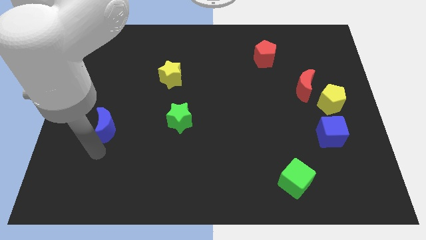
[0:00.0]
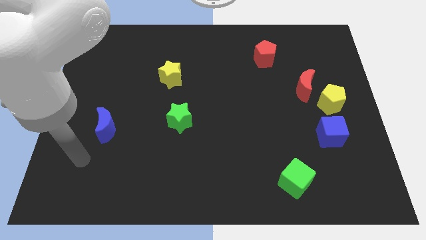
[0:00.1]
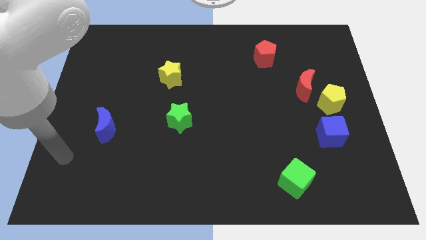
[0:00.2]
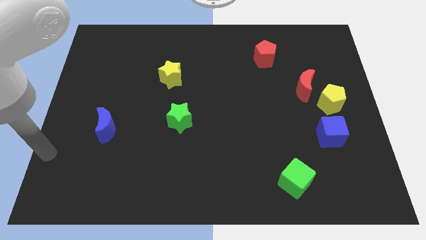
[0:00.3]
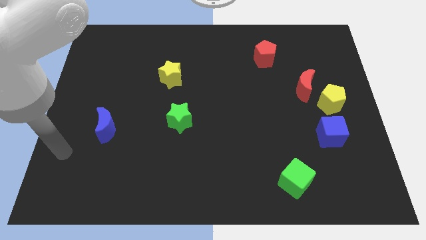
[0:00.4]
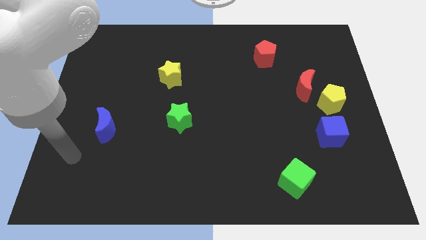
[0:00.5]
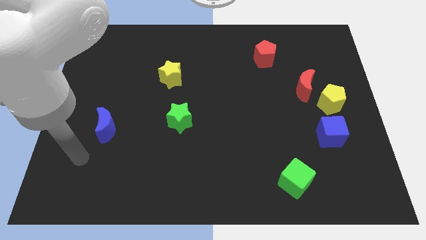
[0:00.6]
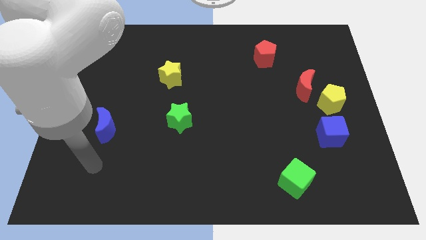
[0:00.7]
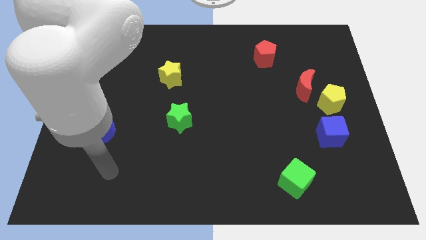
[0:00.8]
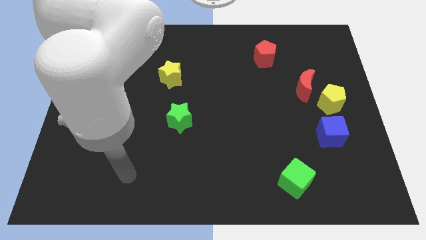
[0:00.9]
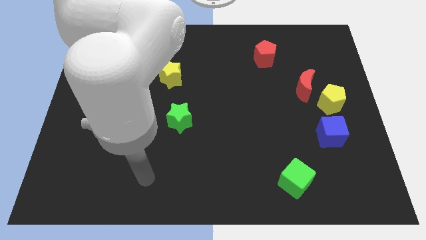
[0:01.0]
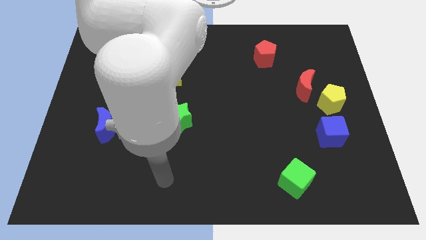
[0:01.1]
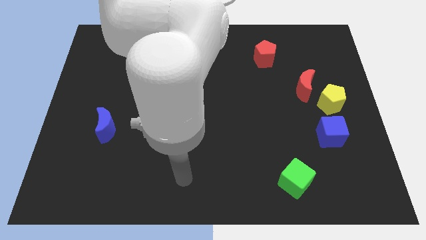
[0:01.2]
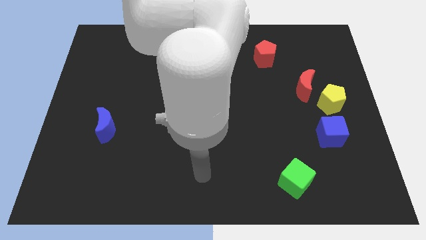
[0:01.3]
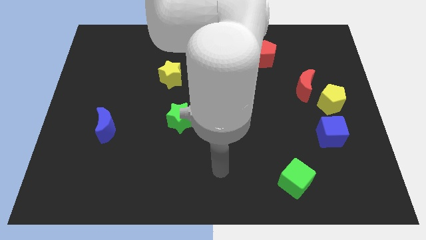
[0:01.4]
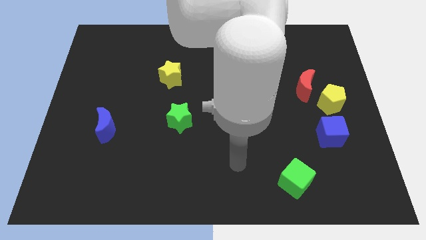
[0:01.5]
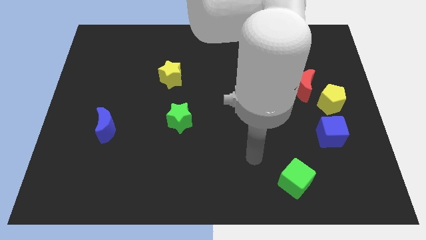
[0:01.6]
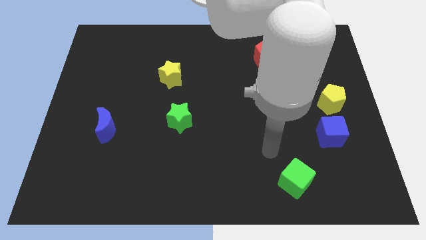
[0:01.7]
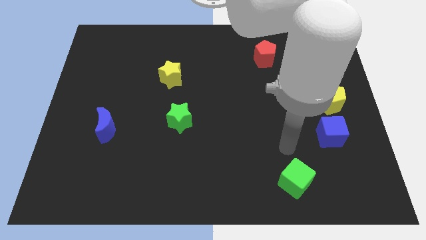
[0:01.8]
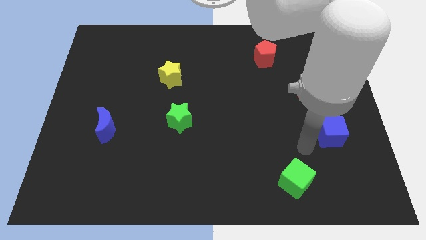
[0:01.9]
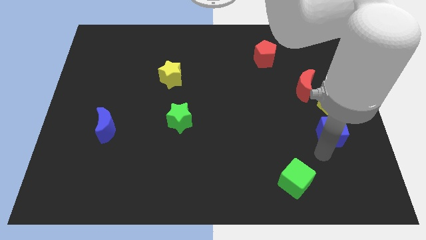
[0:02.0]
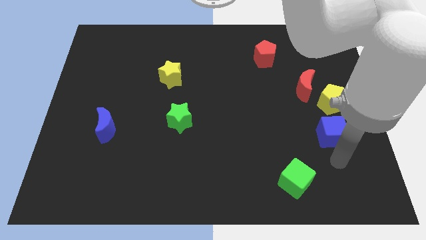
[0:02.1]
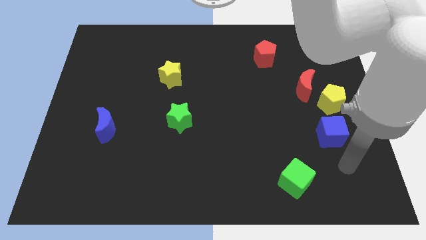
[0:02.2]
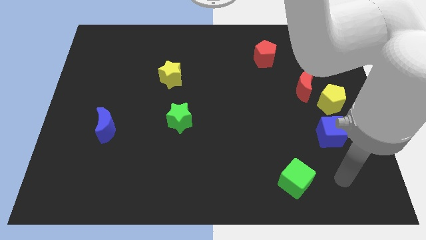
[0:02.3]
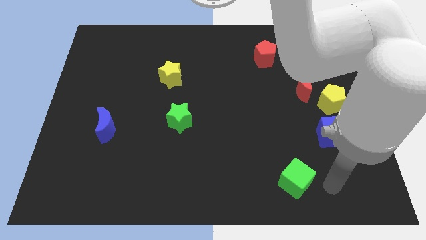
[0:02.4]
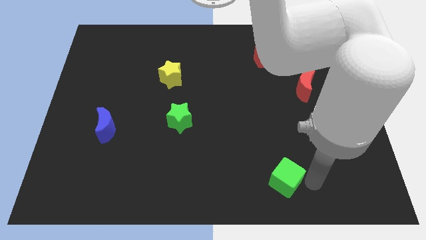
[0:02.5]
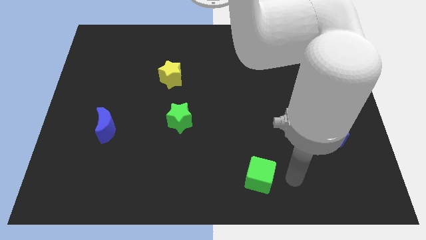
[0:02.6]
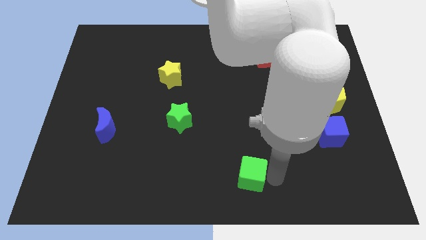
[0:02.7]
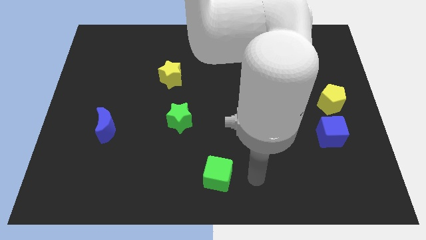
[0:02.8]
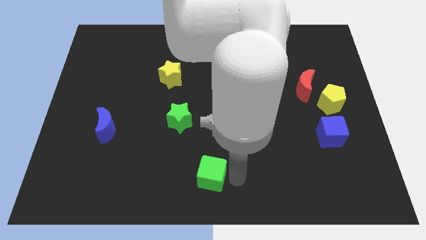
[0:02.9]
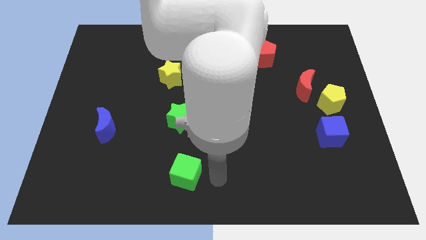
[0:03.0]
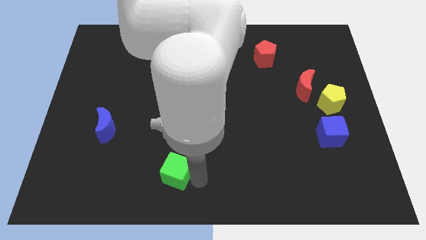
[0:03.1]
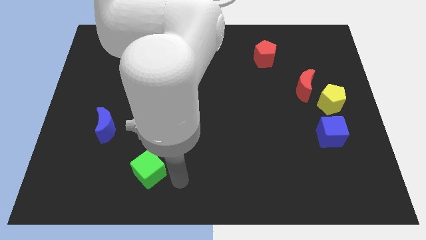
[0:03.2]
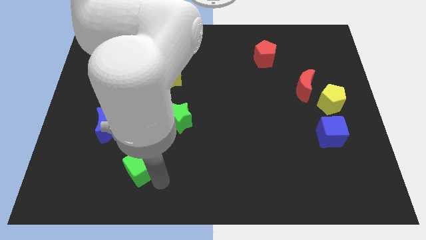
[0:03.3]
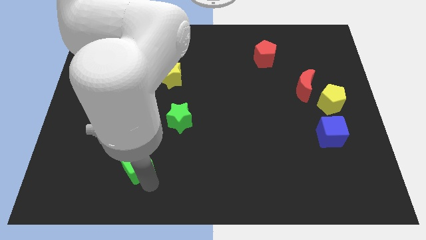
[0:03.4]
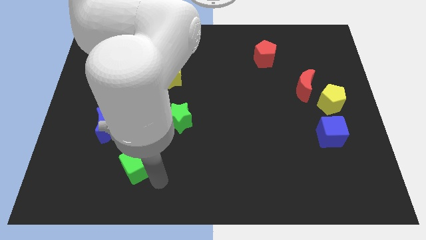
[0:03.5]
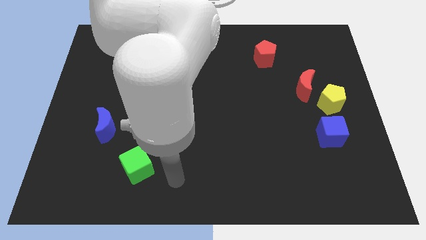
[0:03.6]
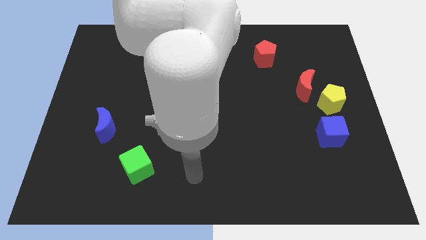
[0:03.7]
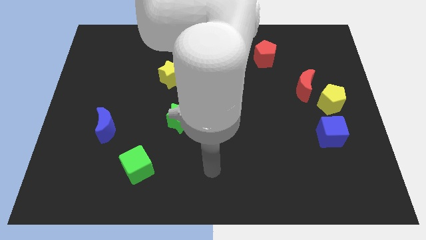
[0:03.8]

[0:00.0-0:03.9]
move the green cube diagonally bottom right to the blue crescent

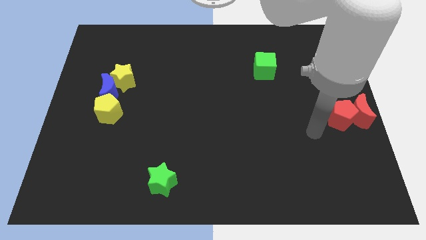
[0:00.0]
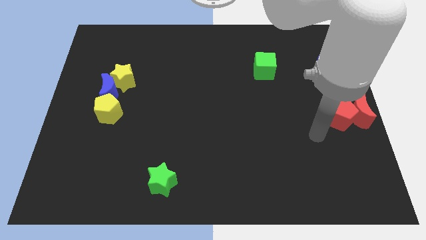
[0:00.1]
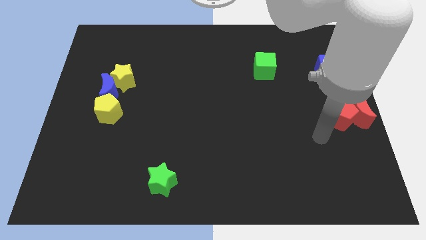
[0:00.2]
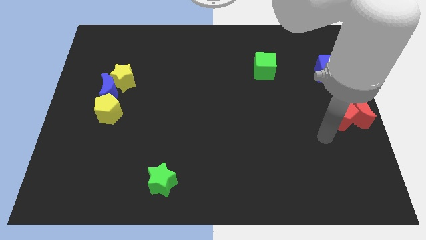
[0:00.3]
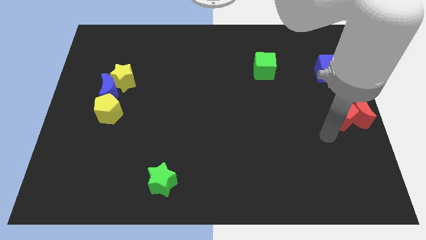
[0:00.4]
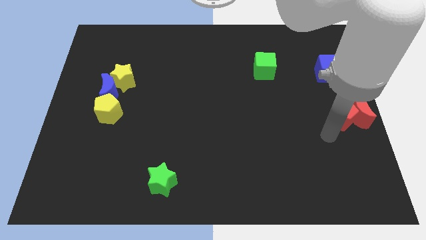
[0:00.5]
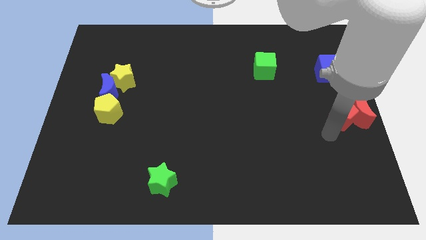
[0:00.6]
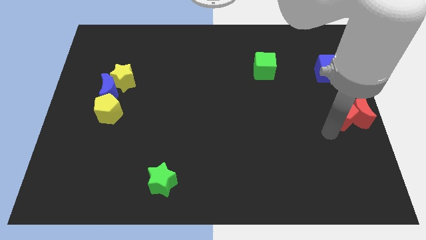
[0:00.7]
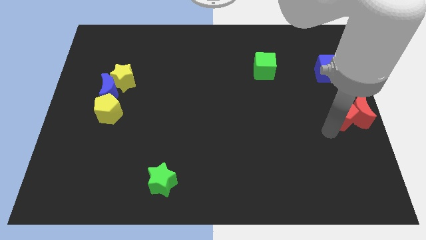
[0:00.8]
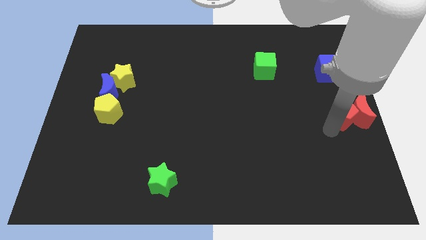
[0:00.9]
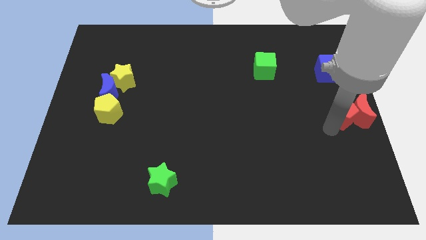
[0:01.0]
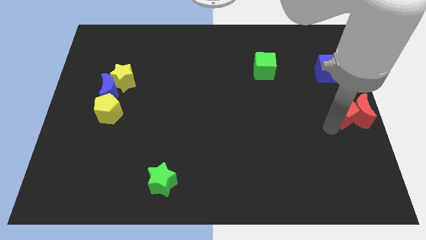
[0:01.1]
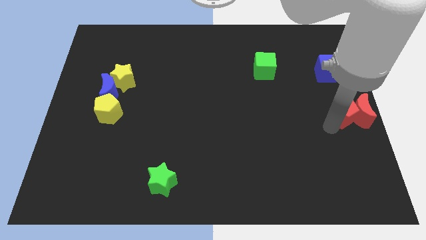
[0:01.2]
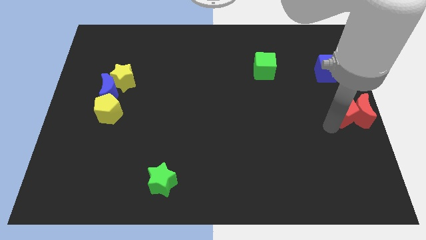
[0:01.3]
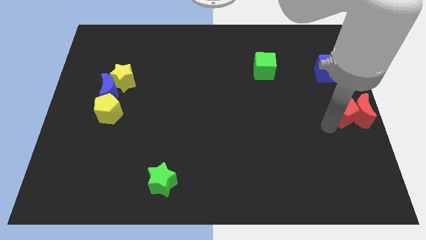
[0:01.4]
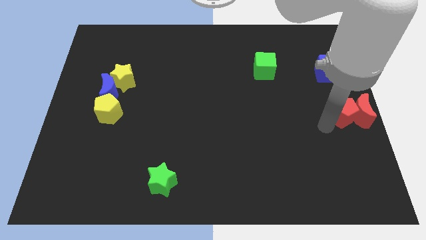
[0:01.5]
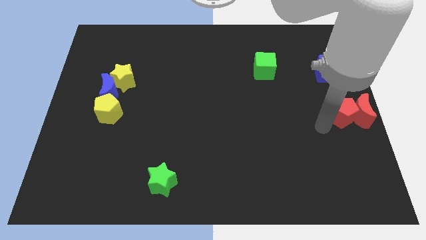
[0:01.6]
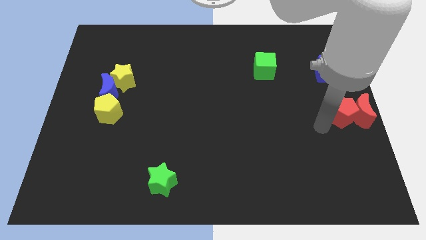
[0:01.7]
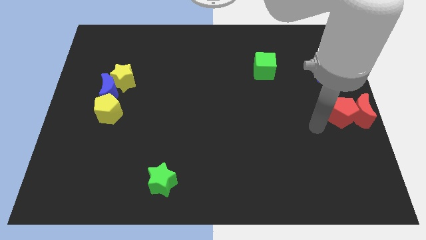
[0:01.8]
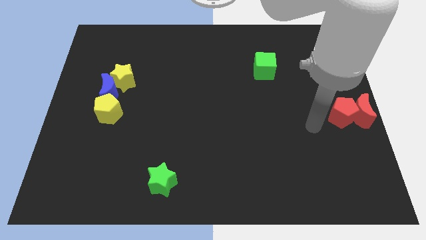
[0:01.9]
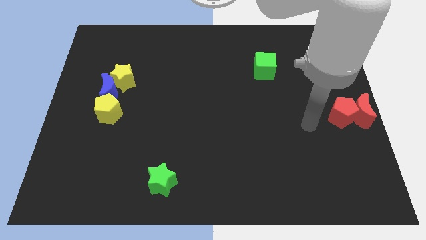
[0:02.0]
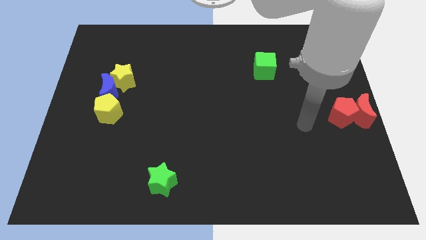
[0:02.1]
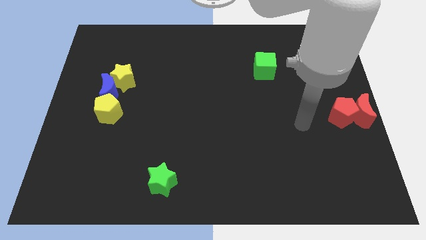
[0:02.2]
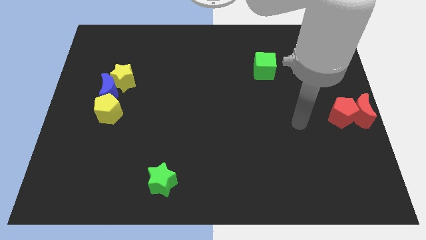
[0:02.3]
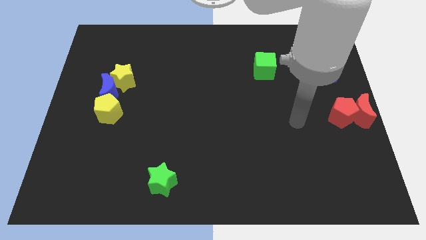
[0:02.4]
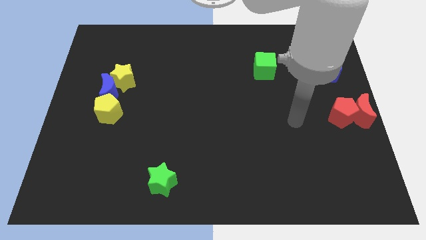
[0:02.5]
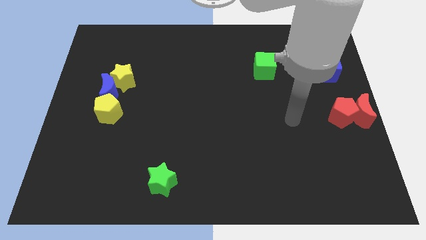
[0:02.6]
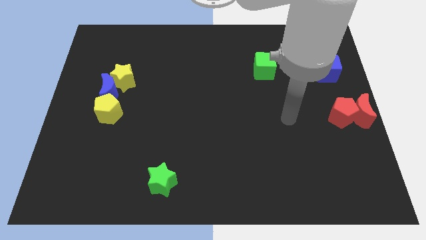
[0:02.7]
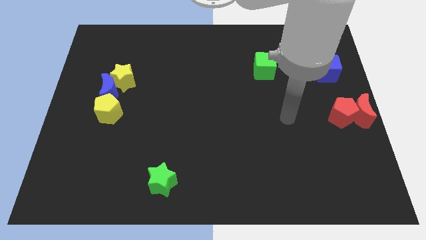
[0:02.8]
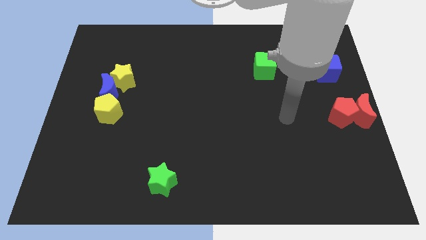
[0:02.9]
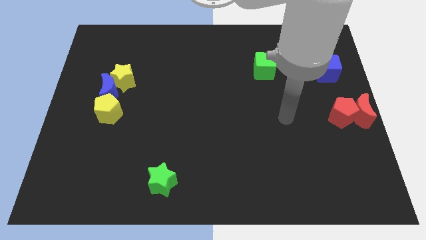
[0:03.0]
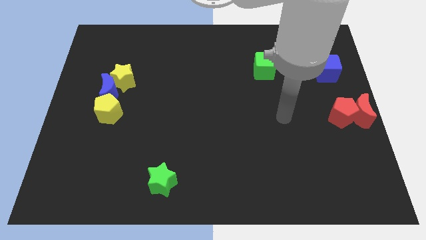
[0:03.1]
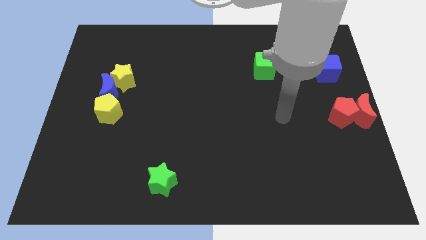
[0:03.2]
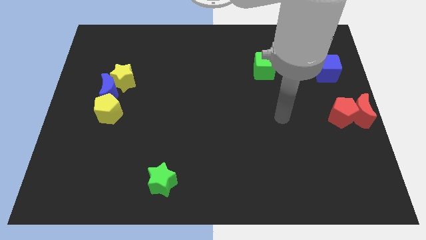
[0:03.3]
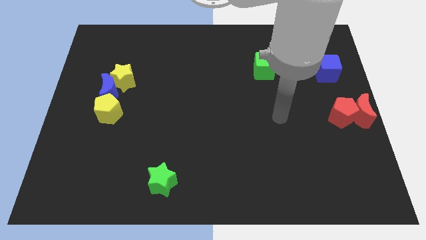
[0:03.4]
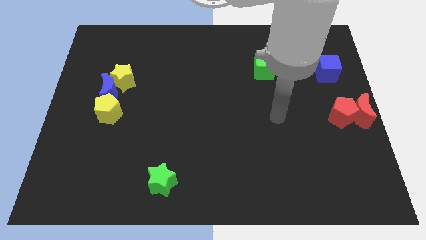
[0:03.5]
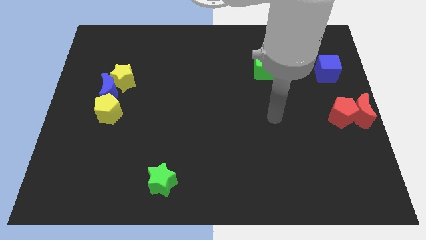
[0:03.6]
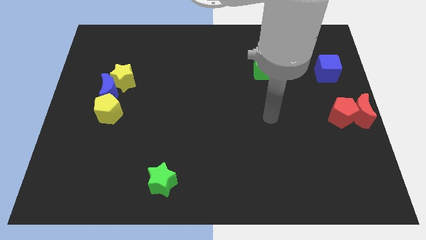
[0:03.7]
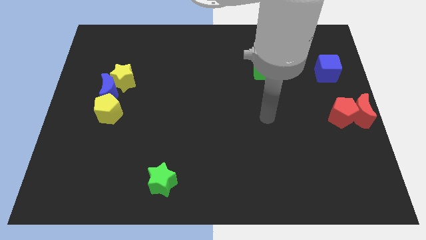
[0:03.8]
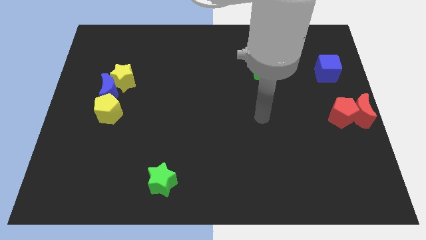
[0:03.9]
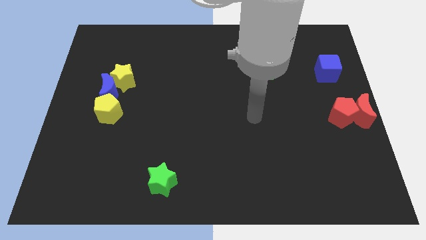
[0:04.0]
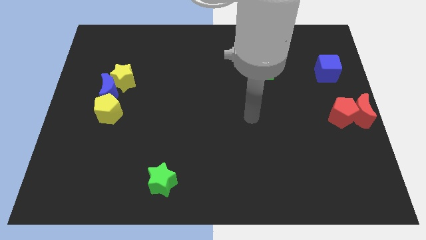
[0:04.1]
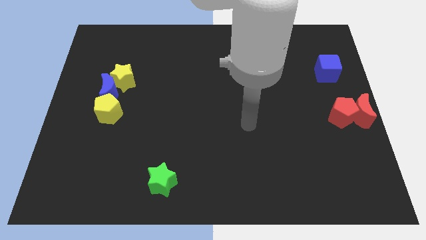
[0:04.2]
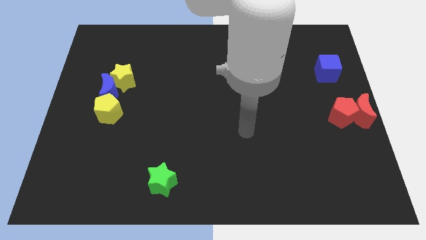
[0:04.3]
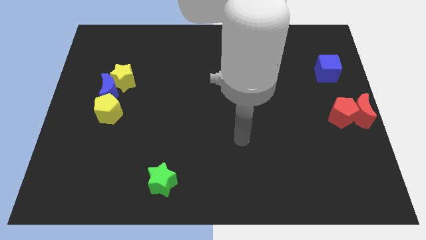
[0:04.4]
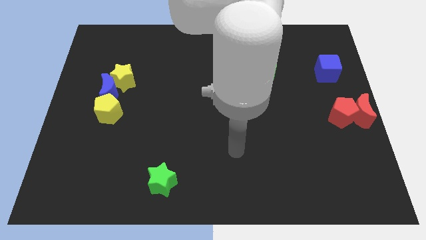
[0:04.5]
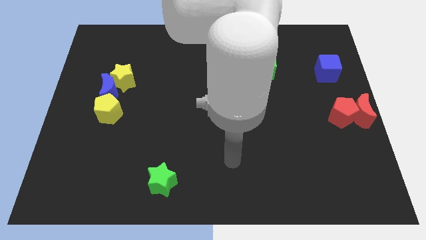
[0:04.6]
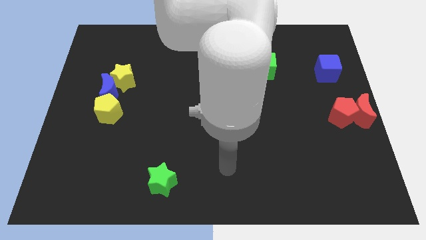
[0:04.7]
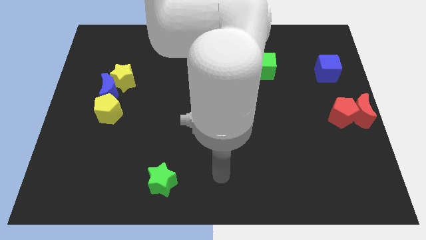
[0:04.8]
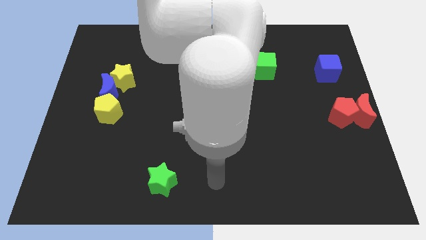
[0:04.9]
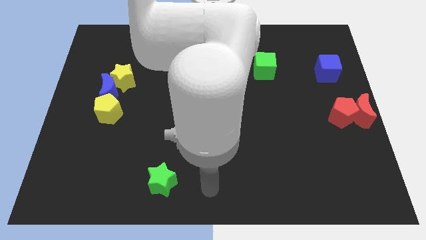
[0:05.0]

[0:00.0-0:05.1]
place your arm to the right of the green star
